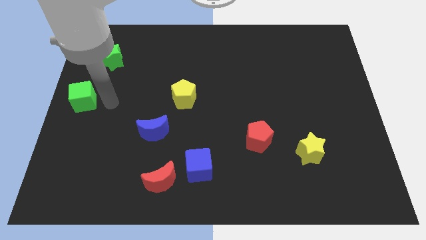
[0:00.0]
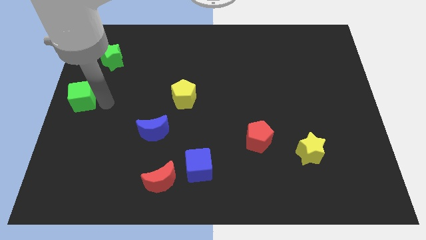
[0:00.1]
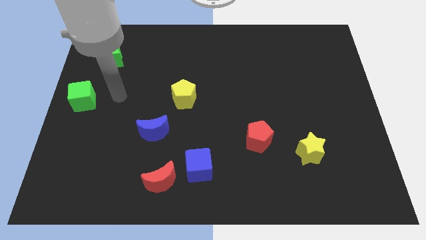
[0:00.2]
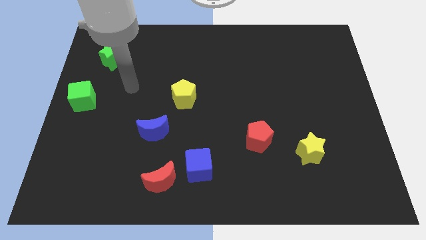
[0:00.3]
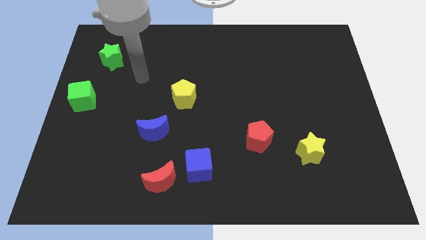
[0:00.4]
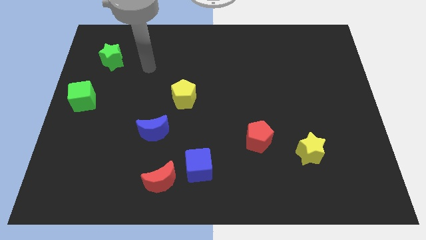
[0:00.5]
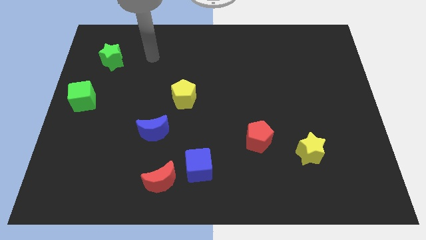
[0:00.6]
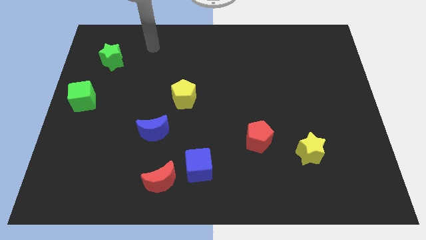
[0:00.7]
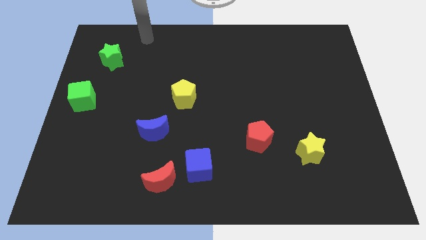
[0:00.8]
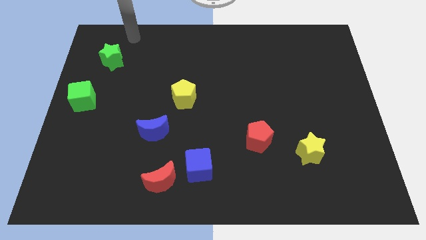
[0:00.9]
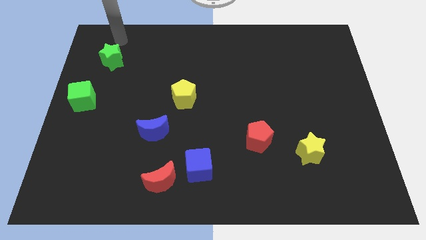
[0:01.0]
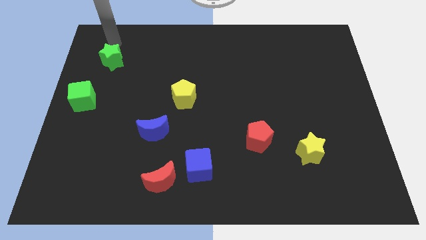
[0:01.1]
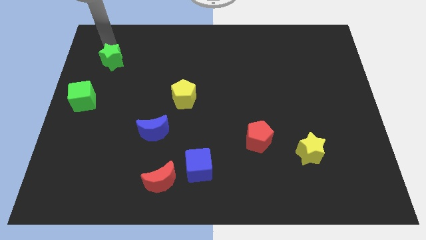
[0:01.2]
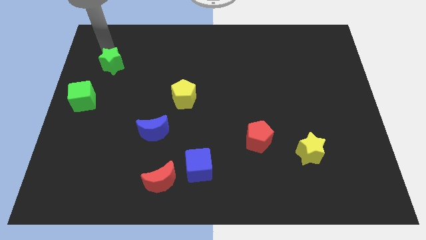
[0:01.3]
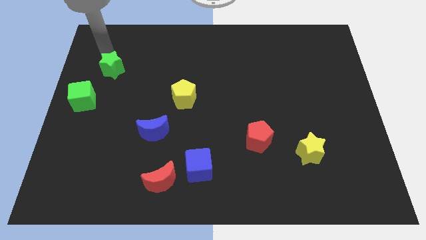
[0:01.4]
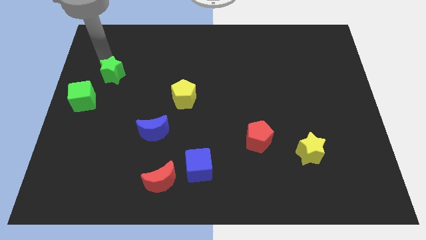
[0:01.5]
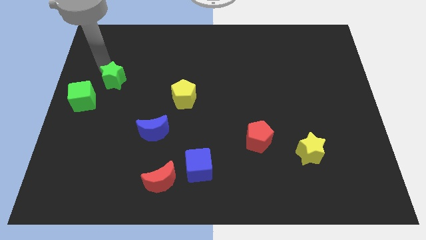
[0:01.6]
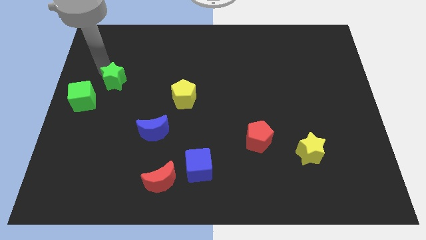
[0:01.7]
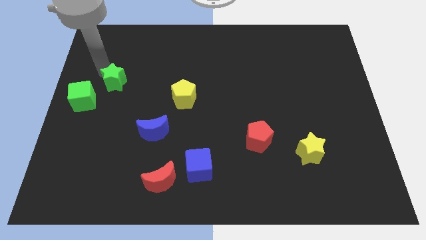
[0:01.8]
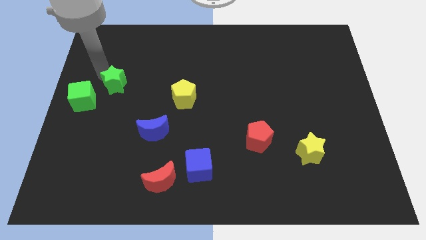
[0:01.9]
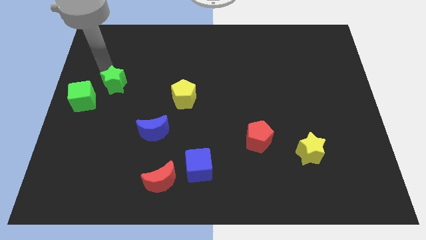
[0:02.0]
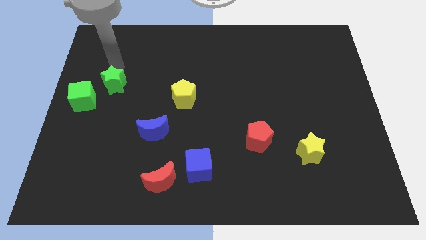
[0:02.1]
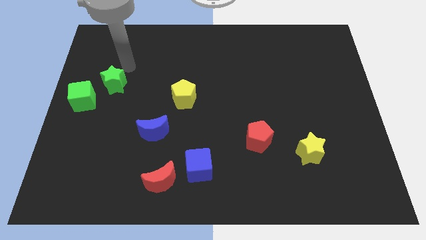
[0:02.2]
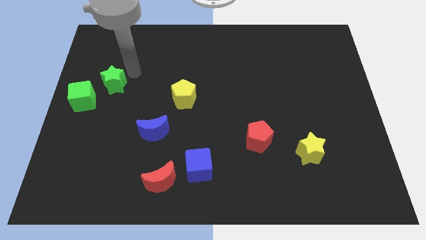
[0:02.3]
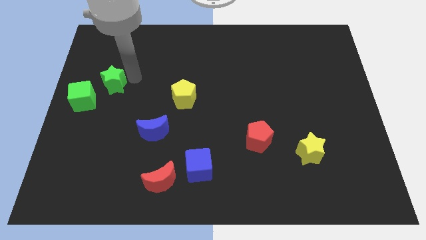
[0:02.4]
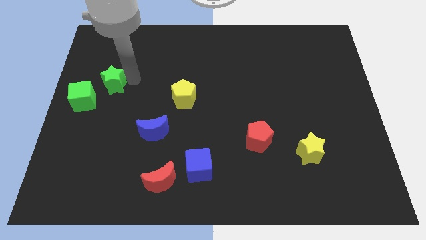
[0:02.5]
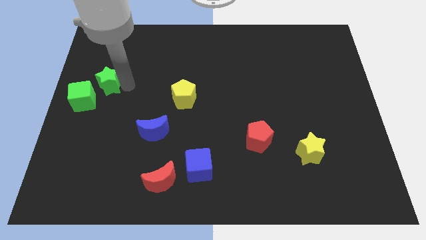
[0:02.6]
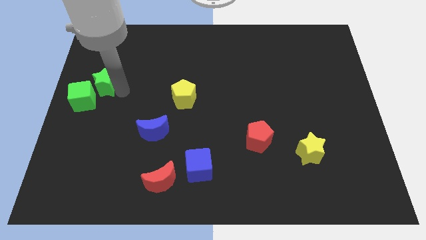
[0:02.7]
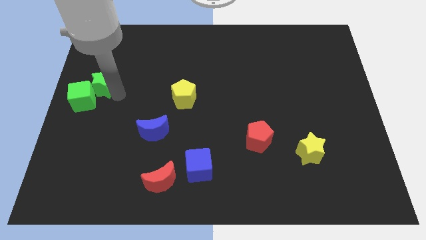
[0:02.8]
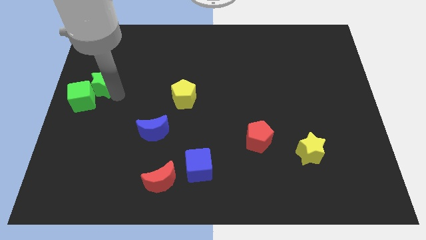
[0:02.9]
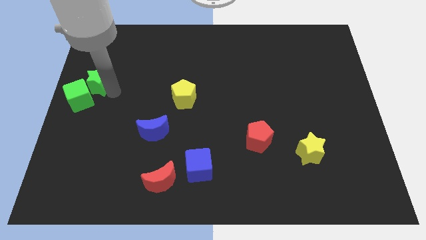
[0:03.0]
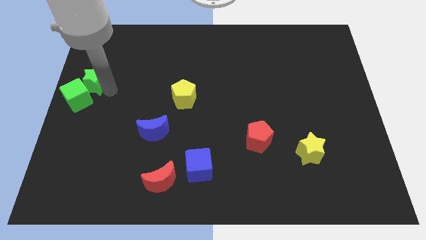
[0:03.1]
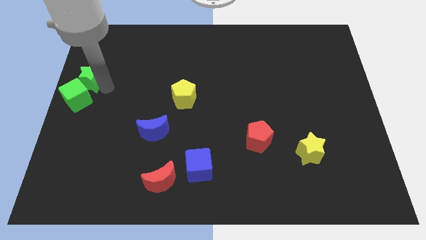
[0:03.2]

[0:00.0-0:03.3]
move green star into the green cube

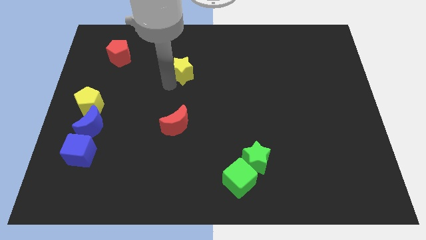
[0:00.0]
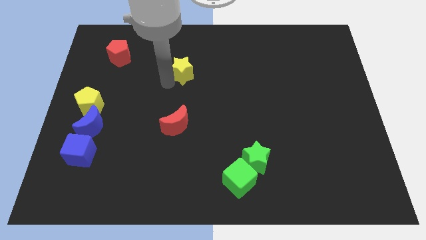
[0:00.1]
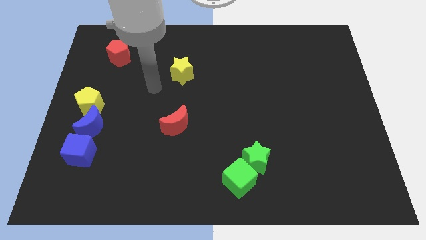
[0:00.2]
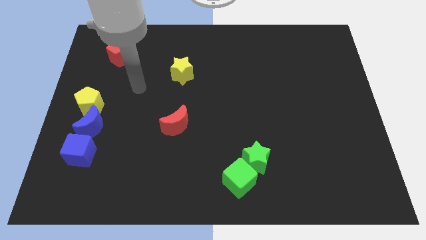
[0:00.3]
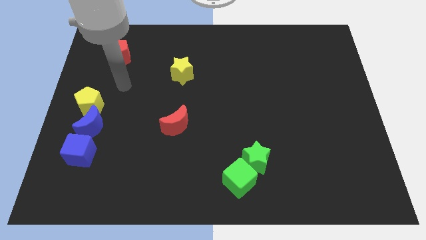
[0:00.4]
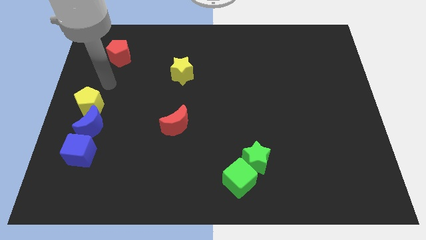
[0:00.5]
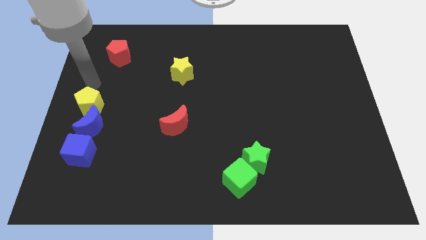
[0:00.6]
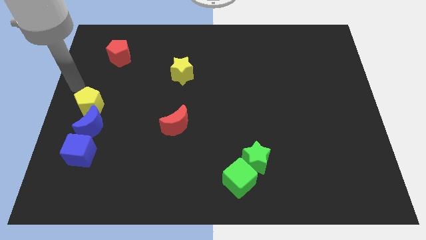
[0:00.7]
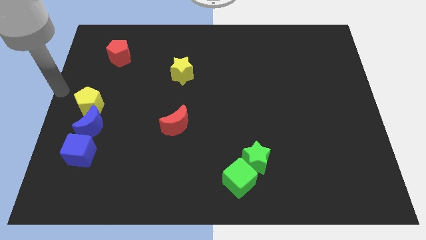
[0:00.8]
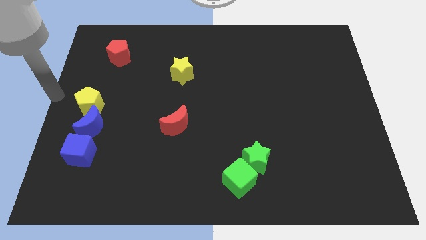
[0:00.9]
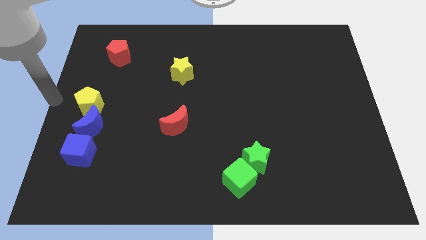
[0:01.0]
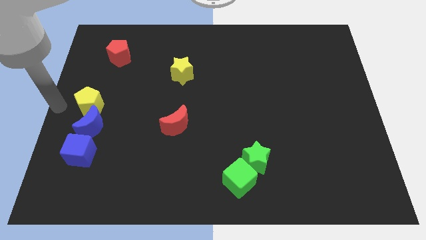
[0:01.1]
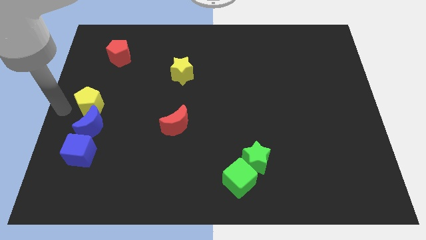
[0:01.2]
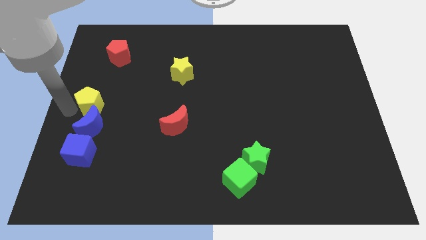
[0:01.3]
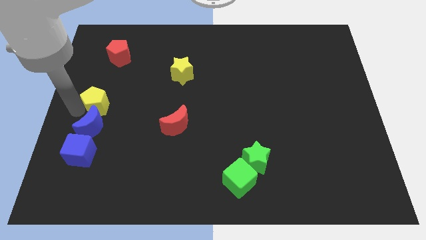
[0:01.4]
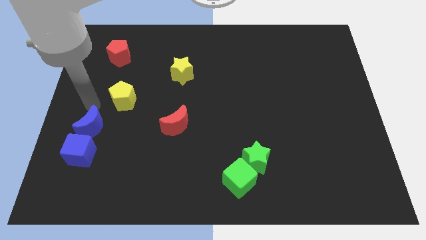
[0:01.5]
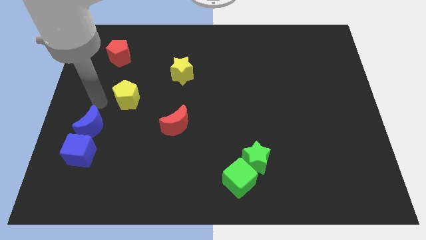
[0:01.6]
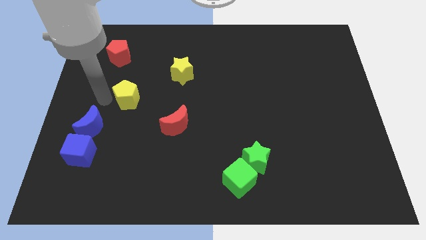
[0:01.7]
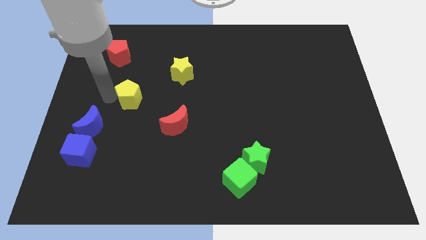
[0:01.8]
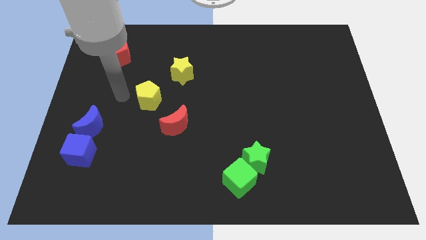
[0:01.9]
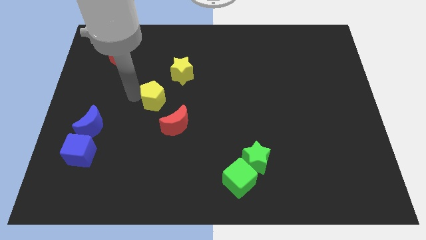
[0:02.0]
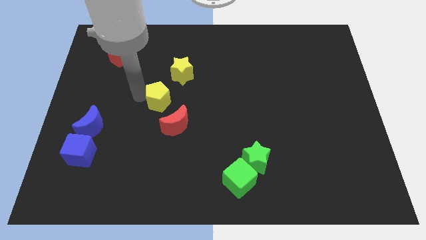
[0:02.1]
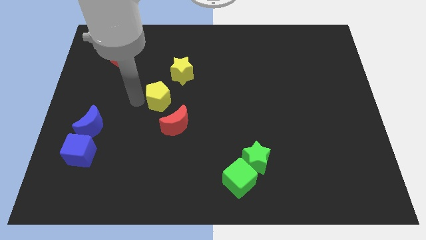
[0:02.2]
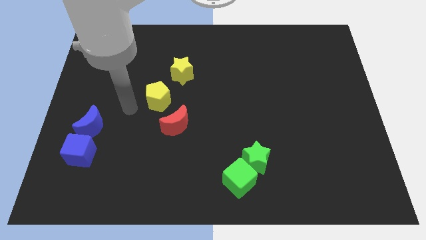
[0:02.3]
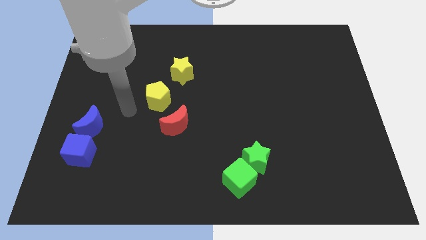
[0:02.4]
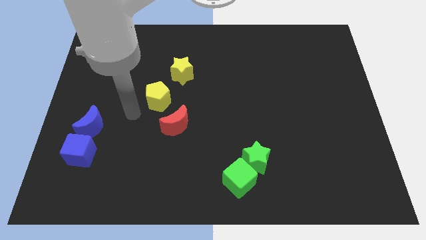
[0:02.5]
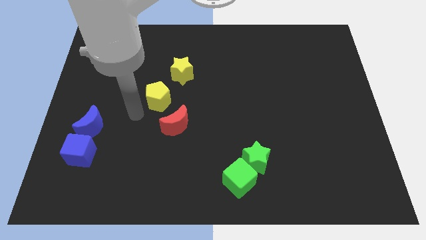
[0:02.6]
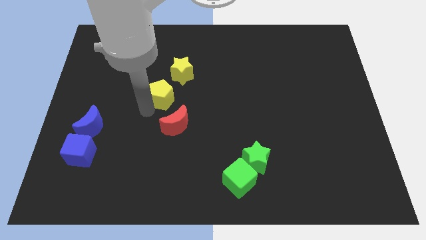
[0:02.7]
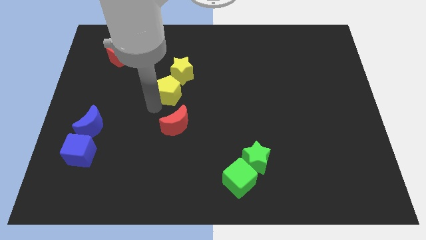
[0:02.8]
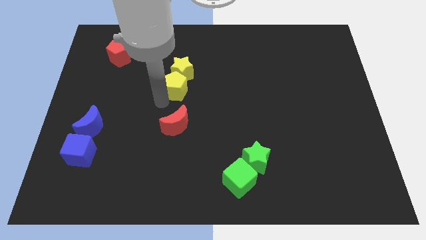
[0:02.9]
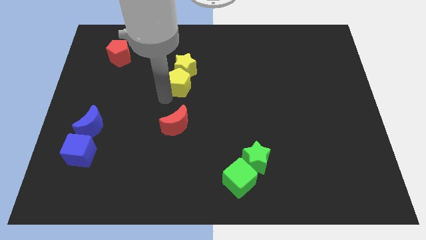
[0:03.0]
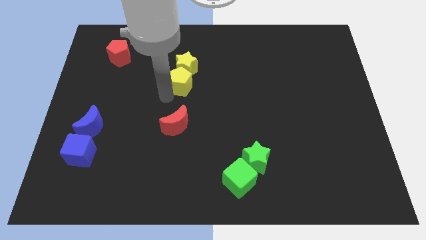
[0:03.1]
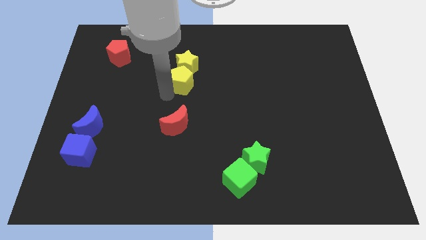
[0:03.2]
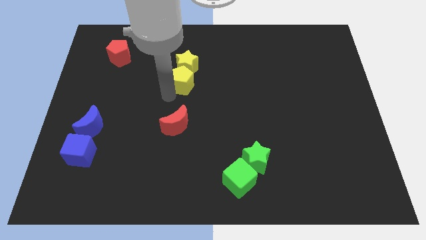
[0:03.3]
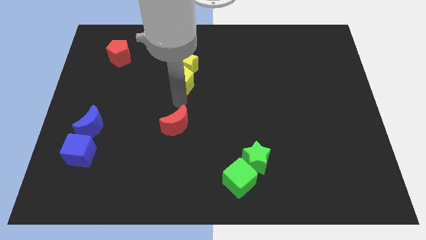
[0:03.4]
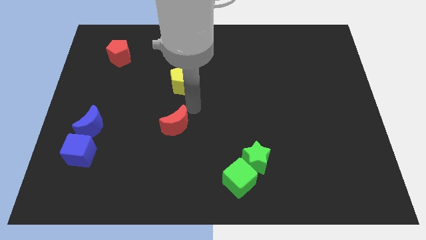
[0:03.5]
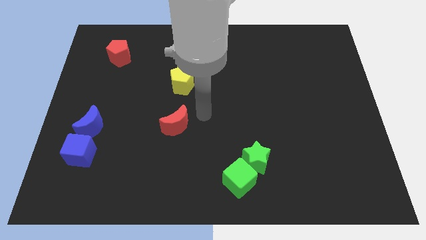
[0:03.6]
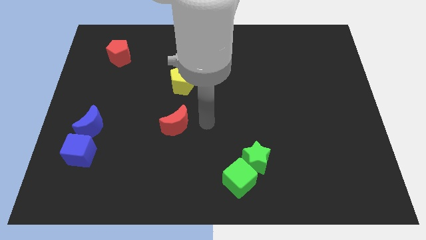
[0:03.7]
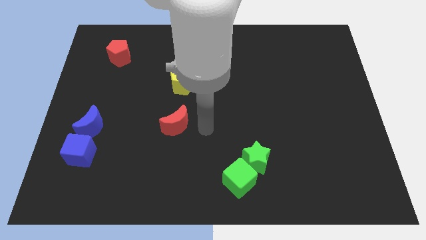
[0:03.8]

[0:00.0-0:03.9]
push yellow pentagon to the bottom right of the red pentagon

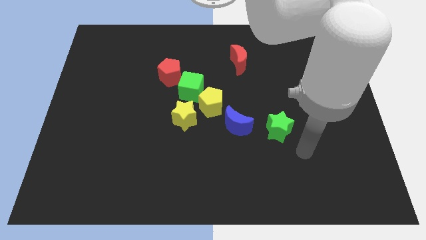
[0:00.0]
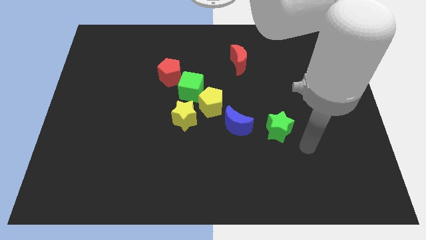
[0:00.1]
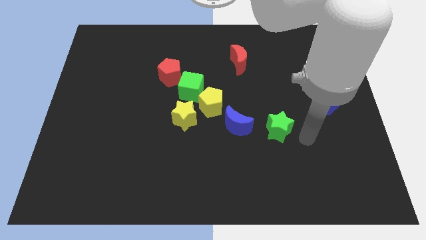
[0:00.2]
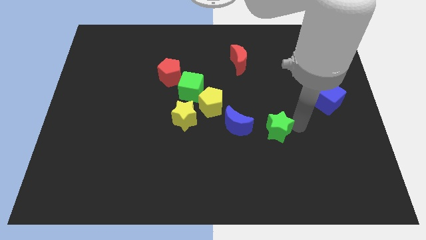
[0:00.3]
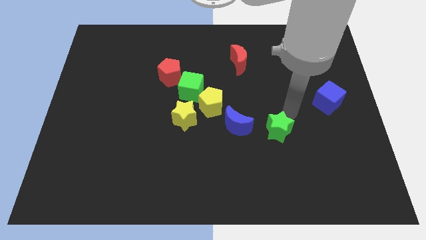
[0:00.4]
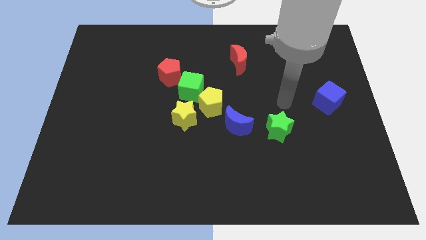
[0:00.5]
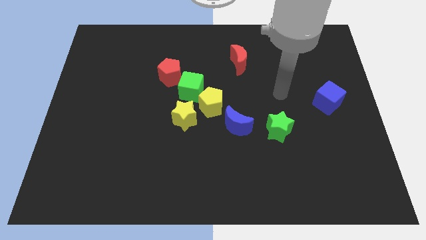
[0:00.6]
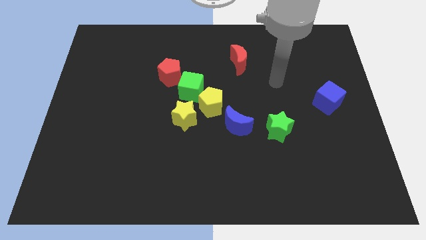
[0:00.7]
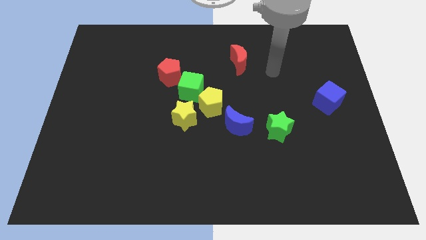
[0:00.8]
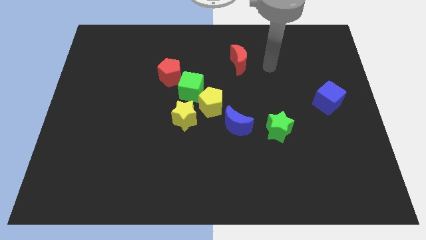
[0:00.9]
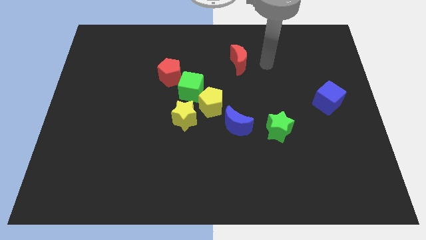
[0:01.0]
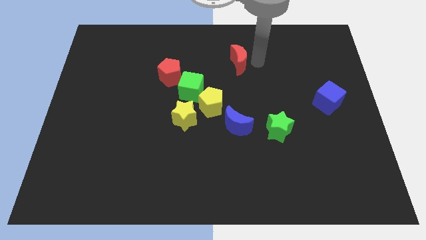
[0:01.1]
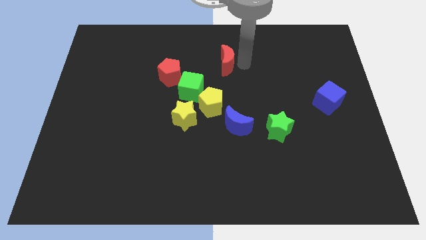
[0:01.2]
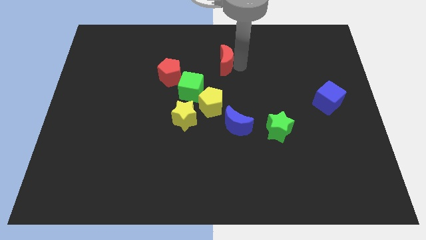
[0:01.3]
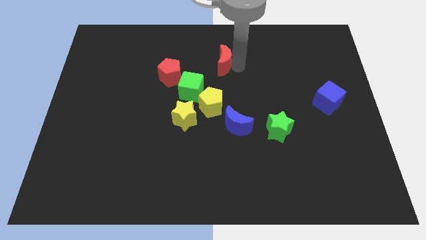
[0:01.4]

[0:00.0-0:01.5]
touch arm to the right of red moon

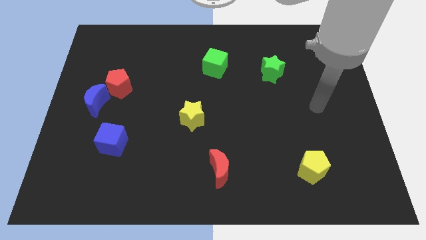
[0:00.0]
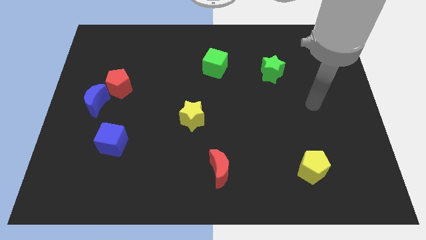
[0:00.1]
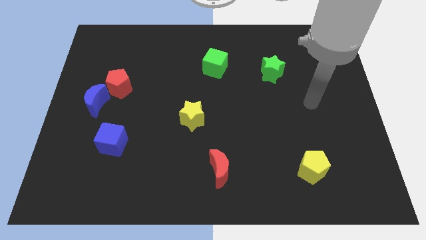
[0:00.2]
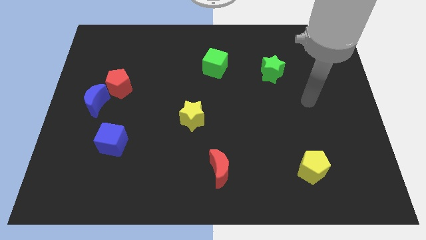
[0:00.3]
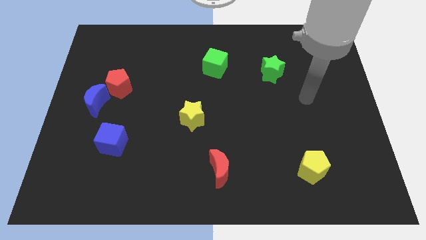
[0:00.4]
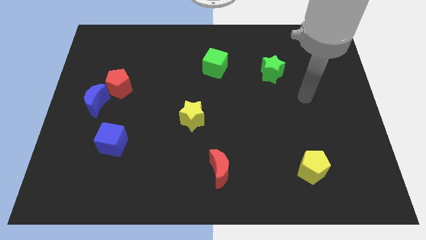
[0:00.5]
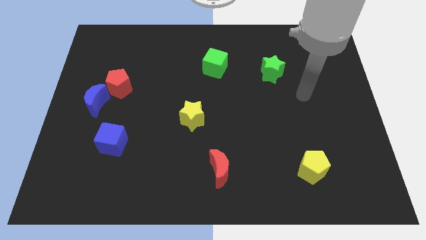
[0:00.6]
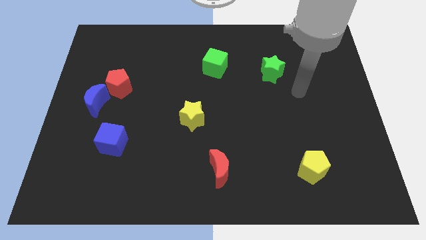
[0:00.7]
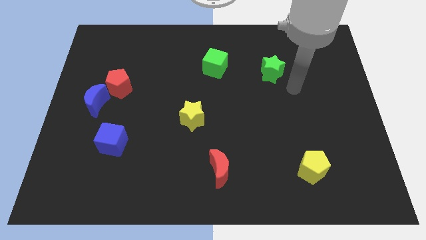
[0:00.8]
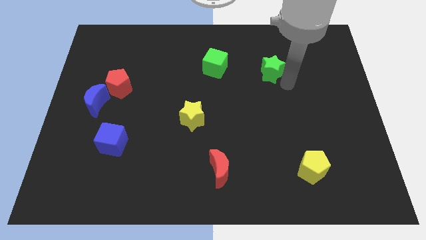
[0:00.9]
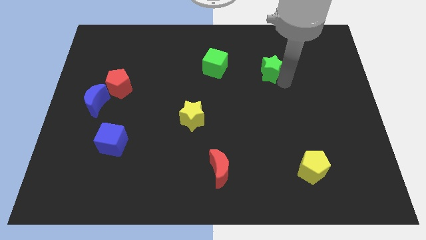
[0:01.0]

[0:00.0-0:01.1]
point your arm right to green star
